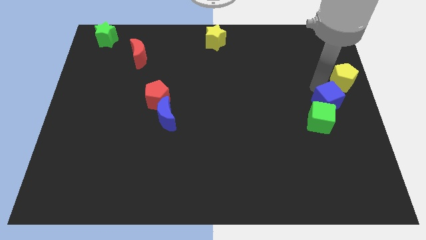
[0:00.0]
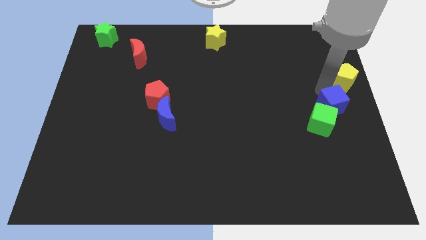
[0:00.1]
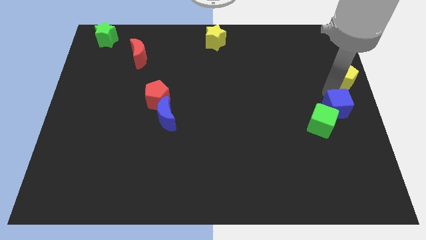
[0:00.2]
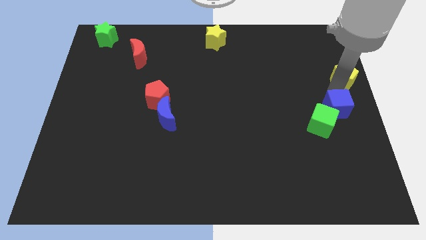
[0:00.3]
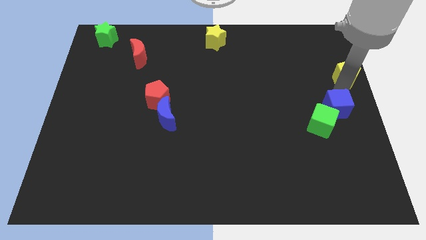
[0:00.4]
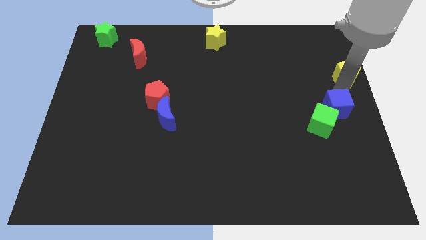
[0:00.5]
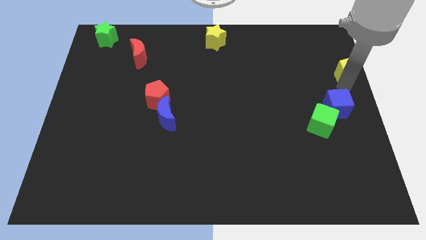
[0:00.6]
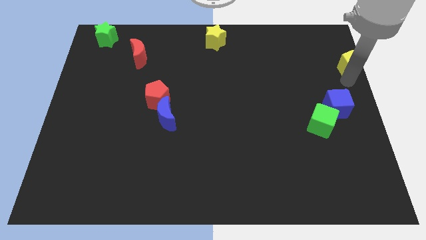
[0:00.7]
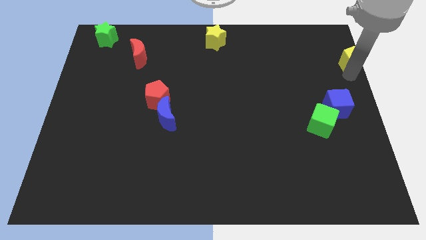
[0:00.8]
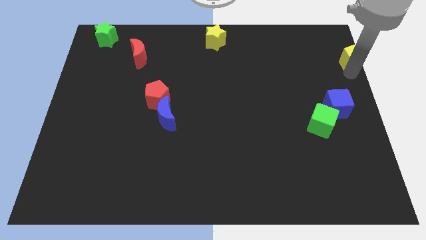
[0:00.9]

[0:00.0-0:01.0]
seperate blue cube and yellow pentagon

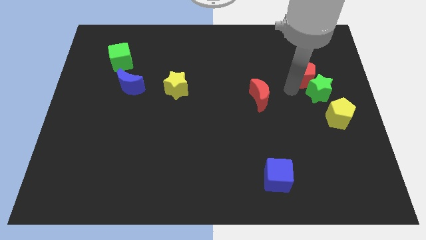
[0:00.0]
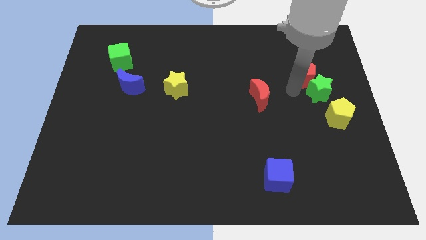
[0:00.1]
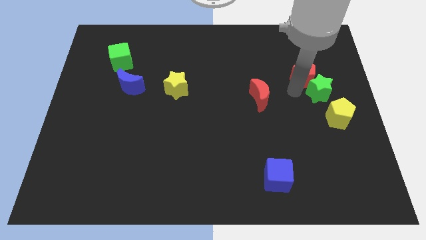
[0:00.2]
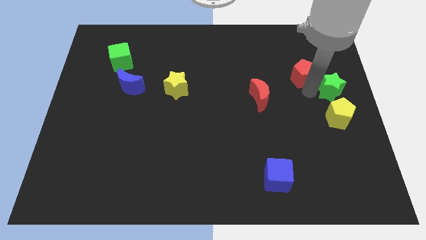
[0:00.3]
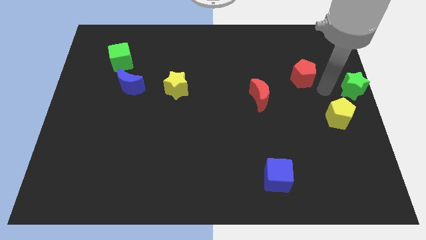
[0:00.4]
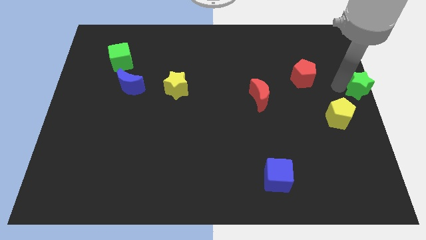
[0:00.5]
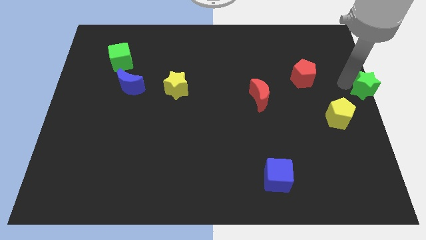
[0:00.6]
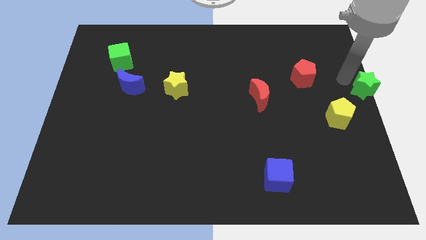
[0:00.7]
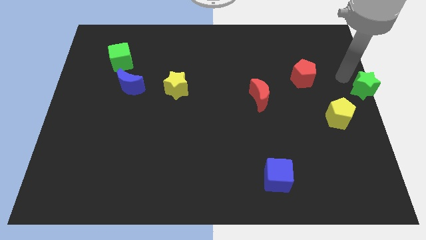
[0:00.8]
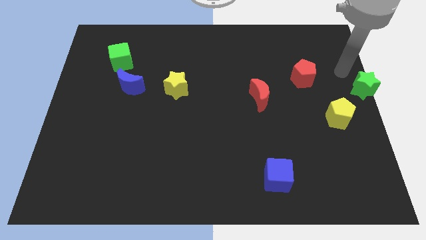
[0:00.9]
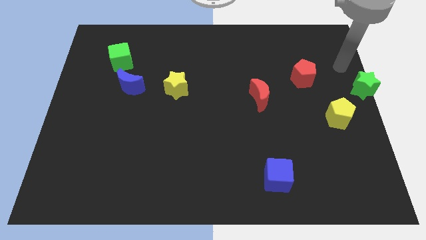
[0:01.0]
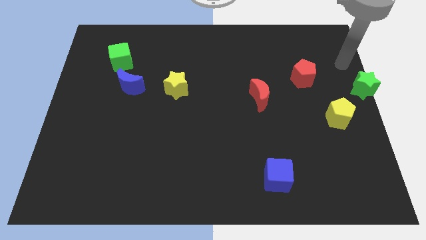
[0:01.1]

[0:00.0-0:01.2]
move the green star to the right center of the board

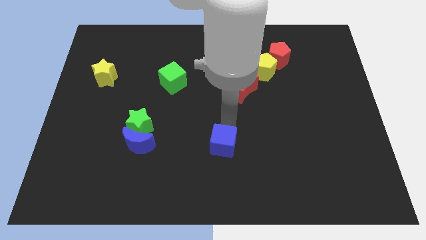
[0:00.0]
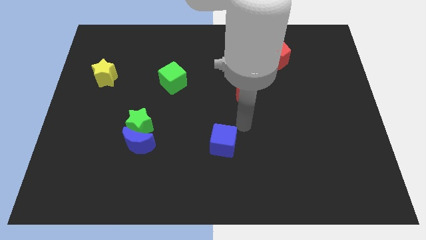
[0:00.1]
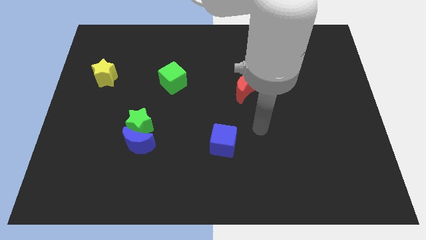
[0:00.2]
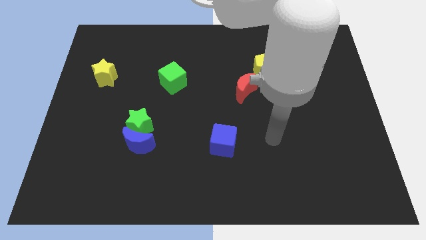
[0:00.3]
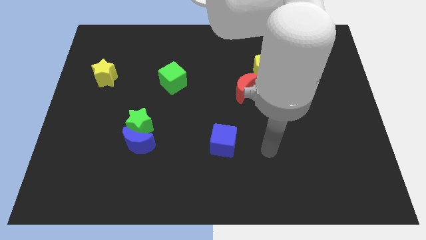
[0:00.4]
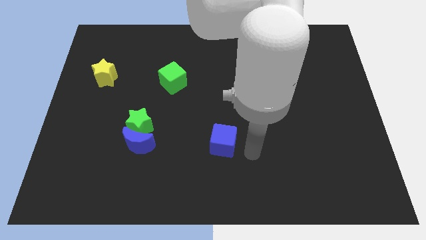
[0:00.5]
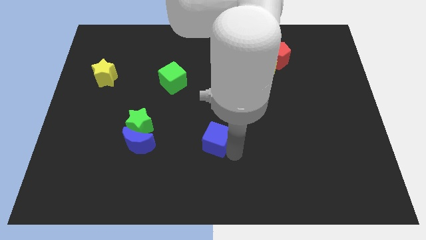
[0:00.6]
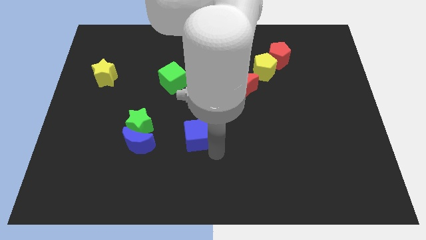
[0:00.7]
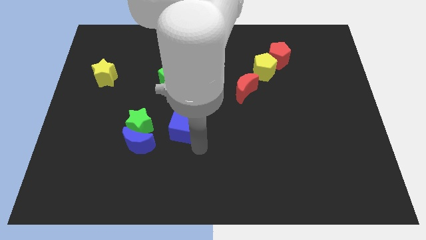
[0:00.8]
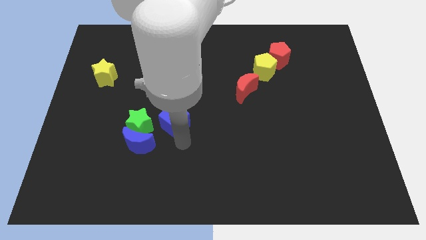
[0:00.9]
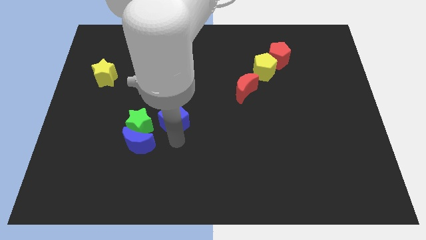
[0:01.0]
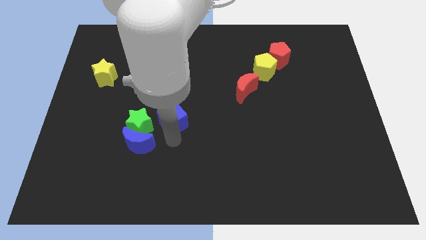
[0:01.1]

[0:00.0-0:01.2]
push the blue cube slightly to the left

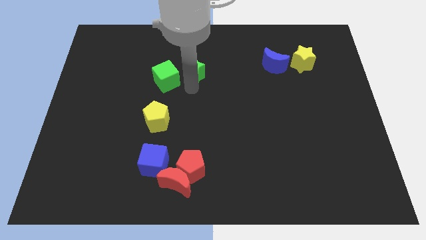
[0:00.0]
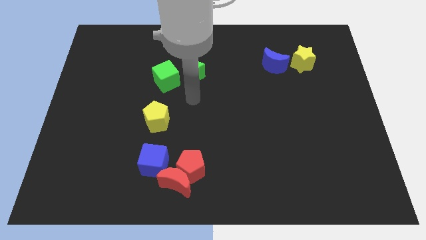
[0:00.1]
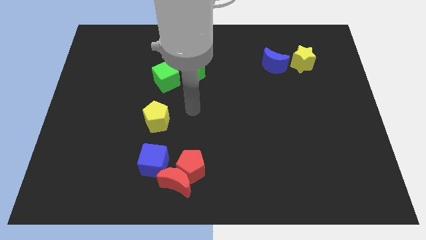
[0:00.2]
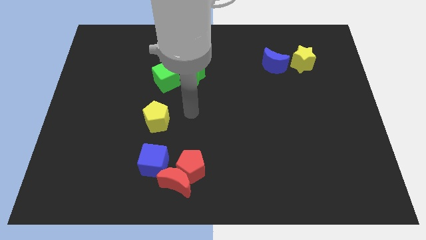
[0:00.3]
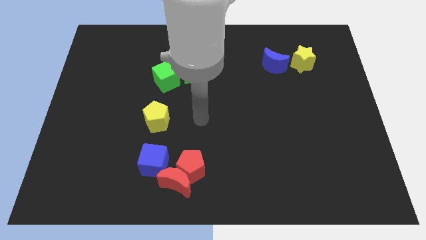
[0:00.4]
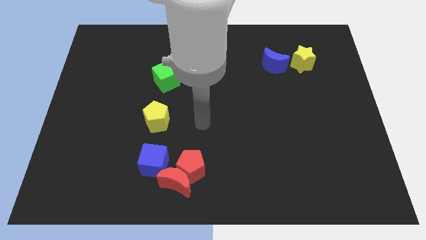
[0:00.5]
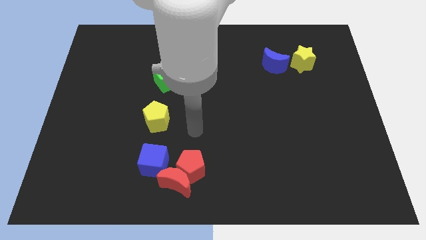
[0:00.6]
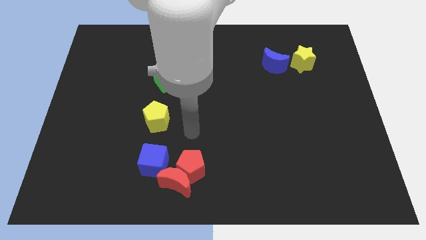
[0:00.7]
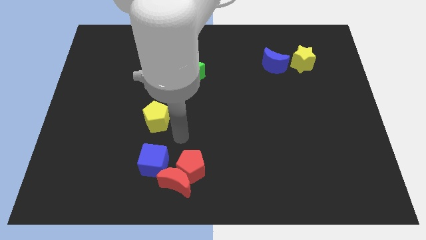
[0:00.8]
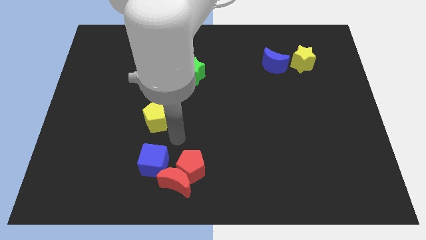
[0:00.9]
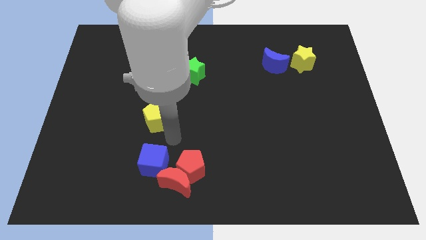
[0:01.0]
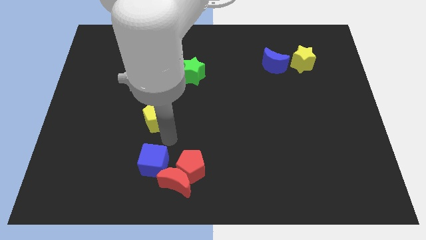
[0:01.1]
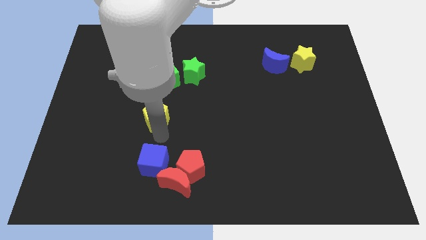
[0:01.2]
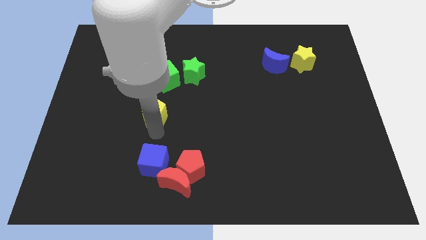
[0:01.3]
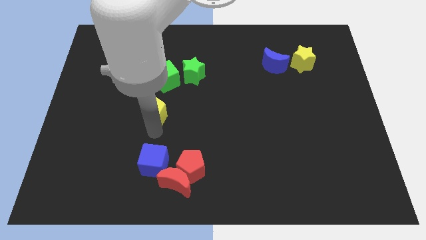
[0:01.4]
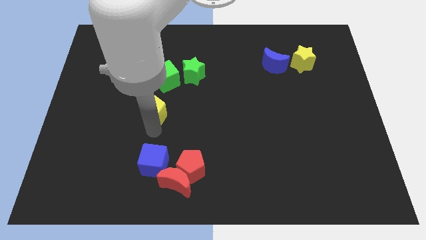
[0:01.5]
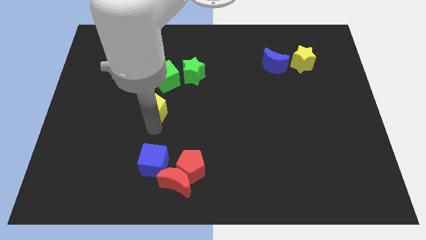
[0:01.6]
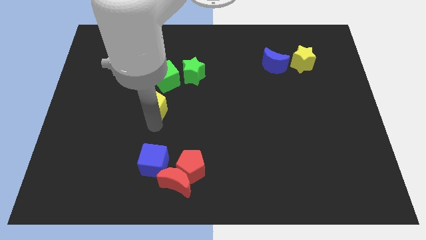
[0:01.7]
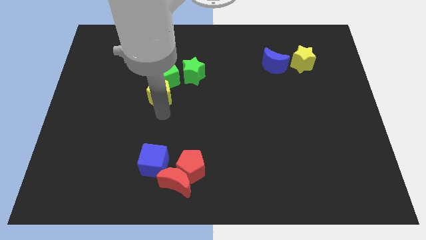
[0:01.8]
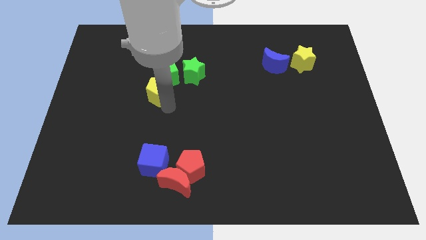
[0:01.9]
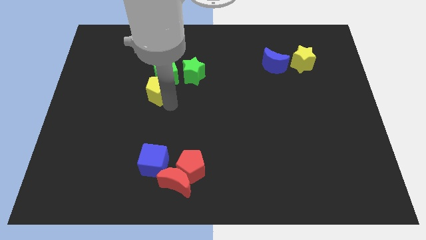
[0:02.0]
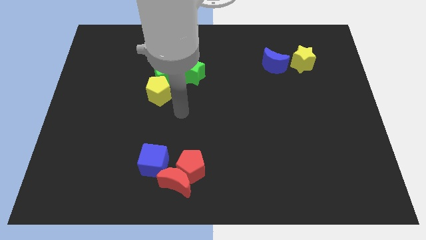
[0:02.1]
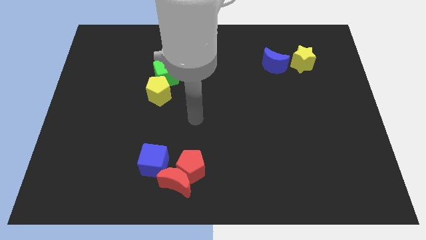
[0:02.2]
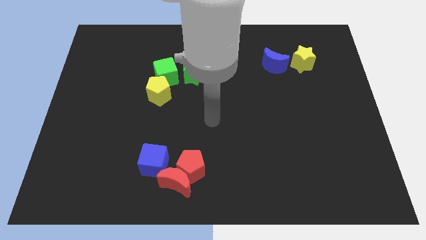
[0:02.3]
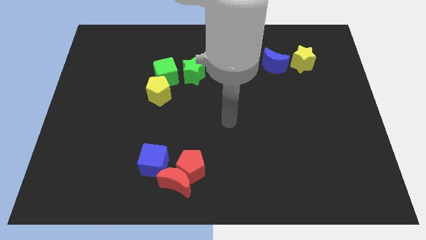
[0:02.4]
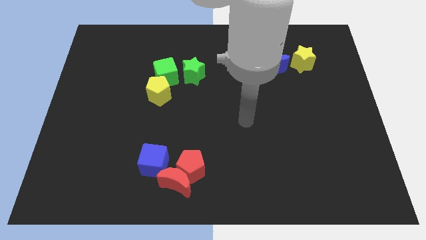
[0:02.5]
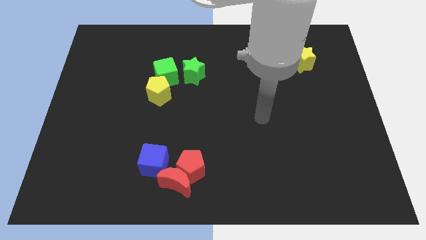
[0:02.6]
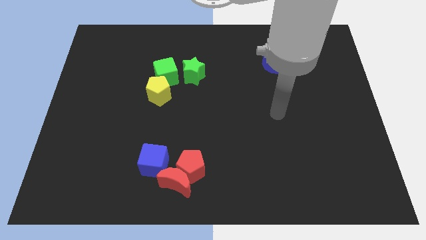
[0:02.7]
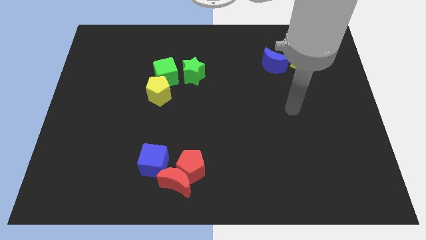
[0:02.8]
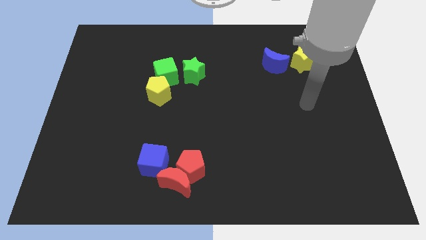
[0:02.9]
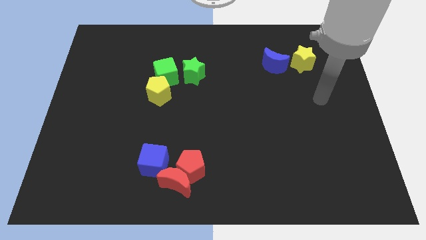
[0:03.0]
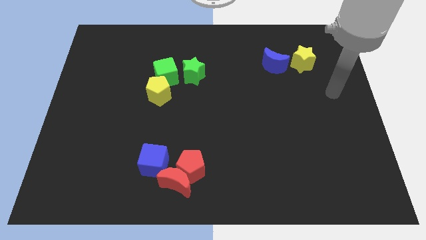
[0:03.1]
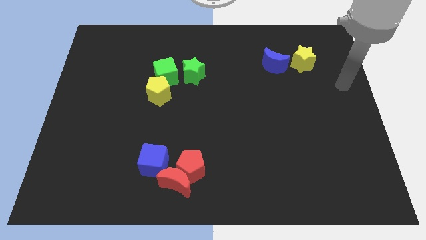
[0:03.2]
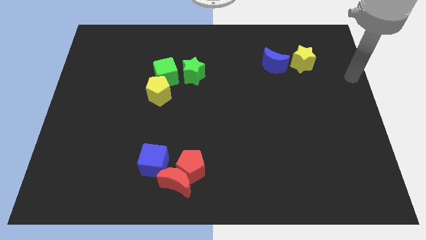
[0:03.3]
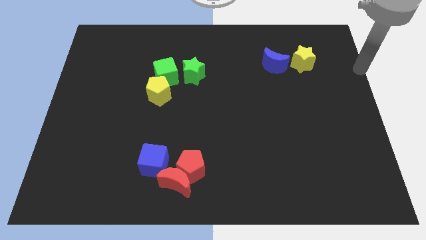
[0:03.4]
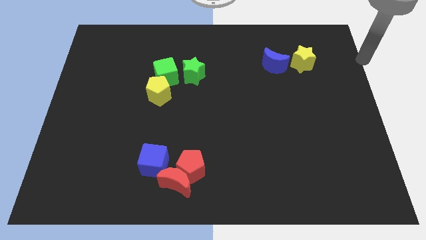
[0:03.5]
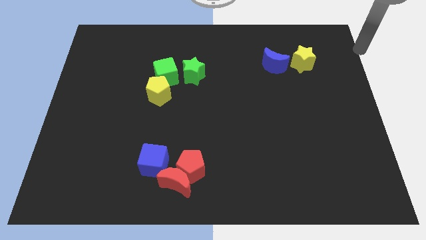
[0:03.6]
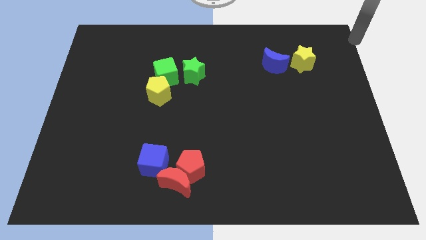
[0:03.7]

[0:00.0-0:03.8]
move yellow pentagon below the green cube

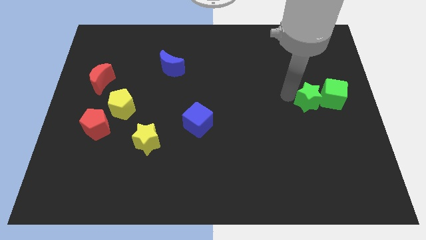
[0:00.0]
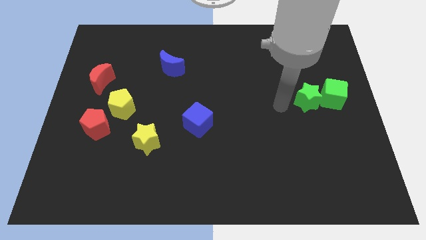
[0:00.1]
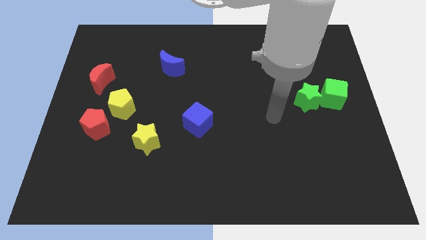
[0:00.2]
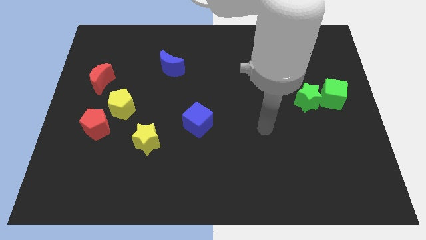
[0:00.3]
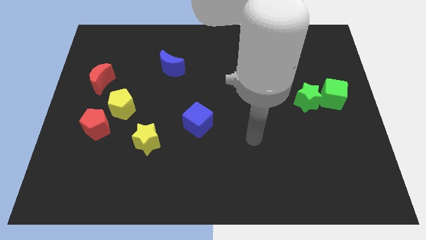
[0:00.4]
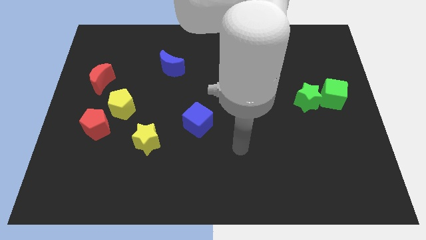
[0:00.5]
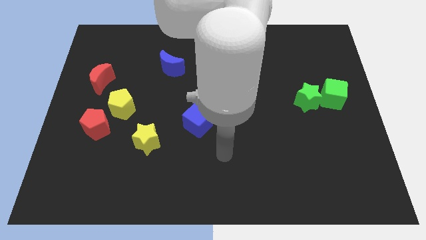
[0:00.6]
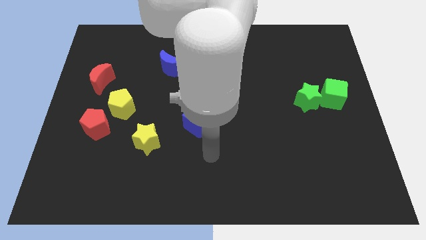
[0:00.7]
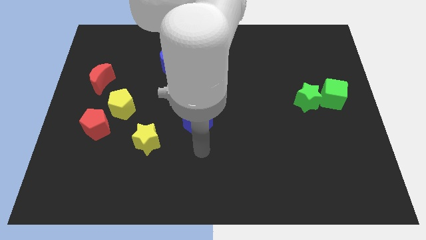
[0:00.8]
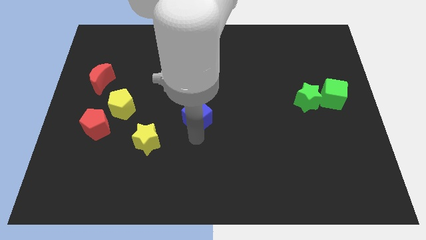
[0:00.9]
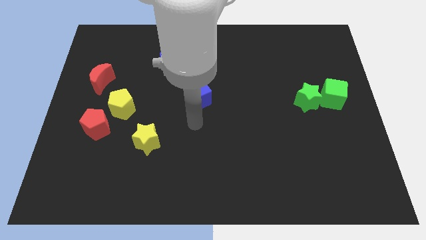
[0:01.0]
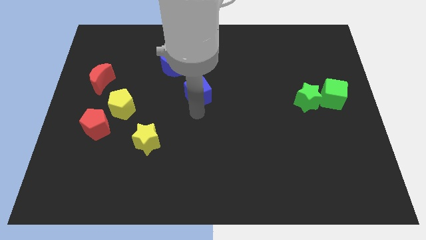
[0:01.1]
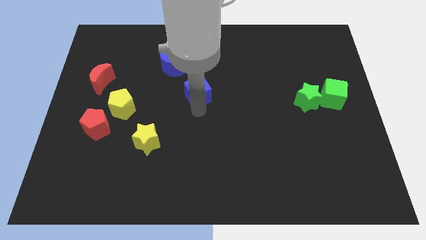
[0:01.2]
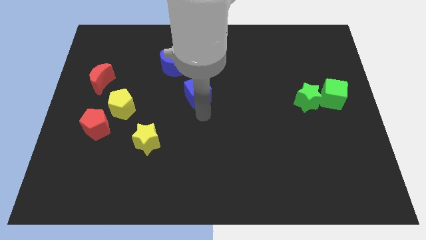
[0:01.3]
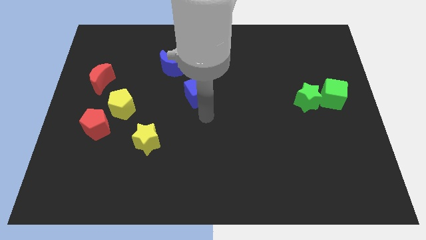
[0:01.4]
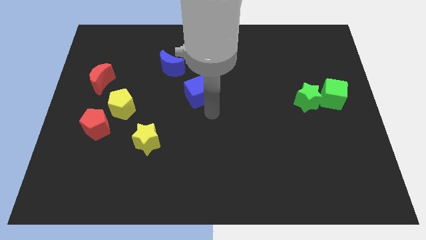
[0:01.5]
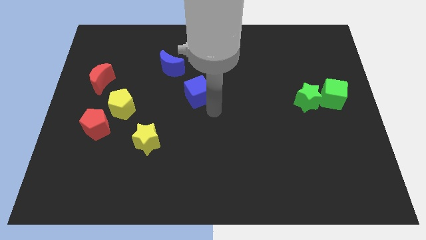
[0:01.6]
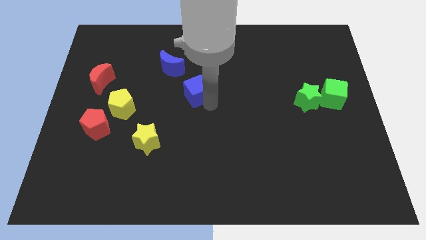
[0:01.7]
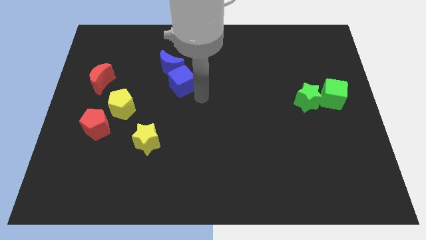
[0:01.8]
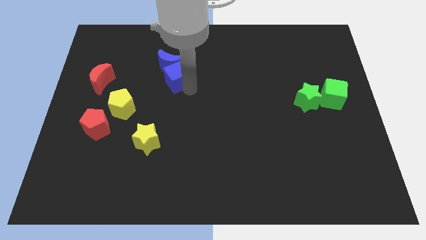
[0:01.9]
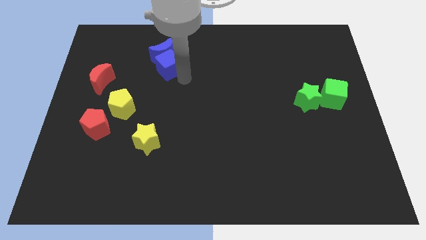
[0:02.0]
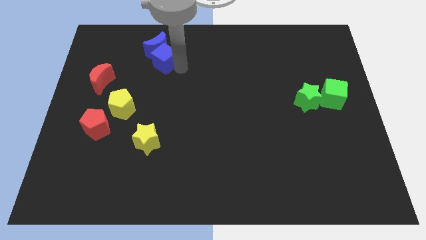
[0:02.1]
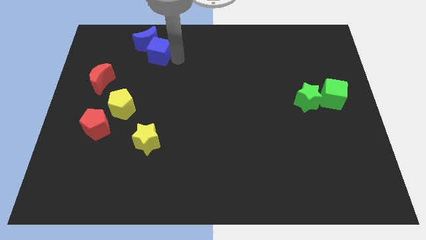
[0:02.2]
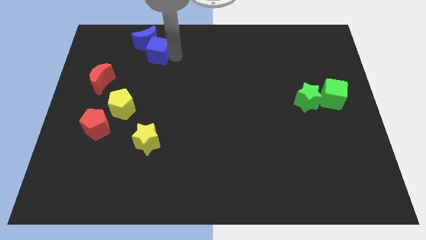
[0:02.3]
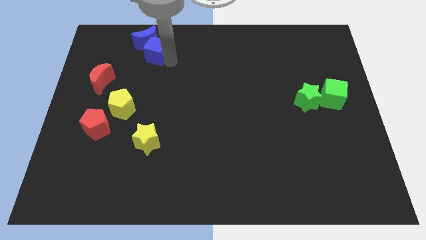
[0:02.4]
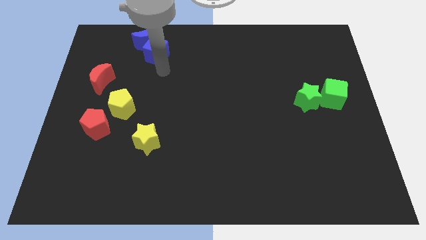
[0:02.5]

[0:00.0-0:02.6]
push the blue blocks towards the top side of the board
